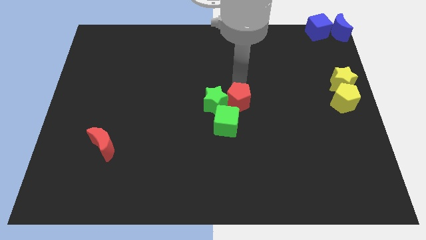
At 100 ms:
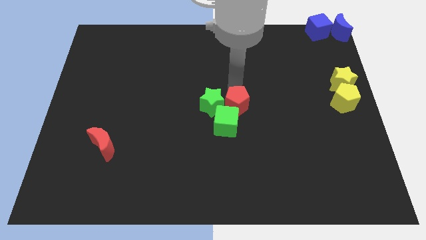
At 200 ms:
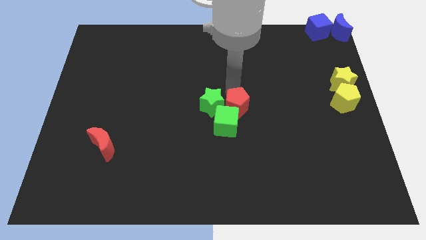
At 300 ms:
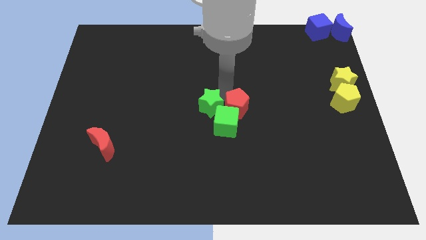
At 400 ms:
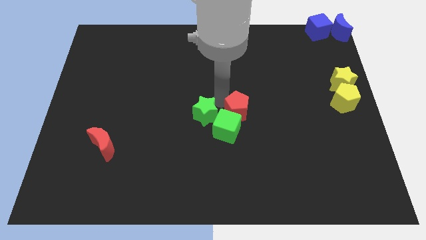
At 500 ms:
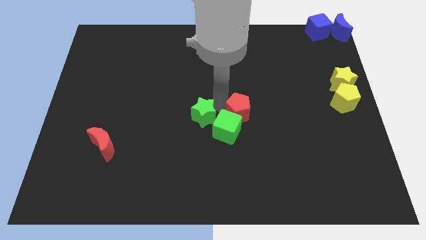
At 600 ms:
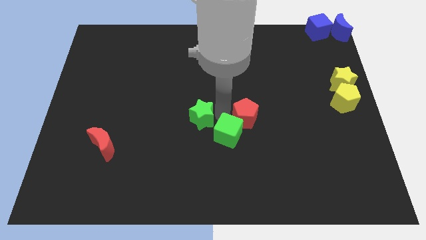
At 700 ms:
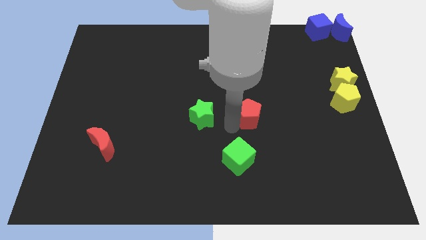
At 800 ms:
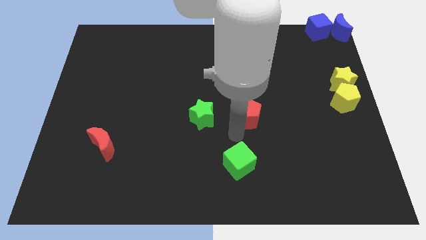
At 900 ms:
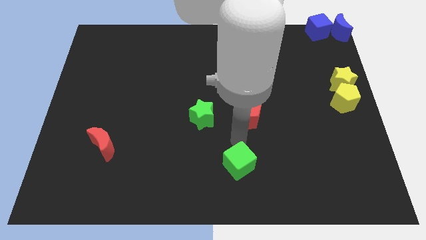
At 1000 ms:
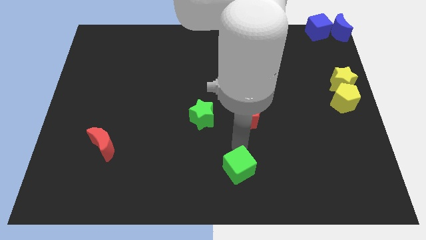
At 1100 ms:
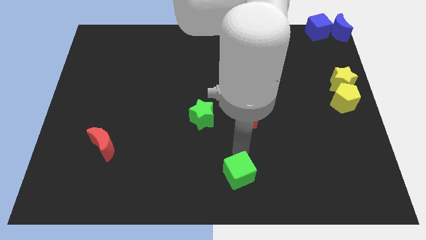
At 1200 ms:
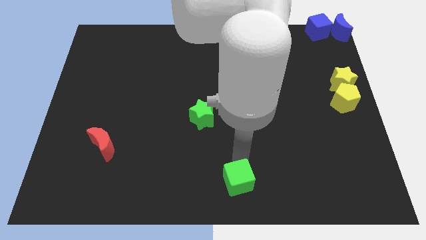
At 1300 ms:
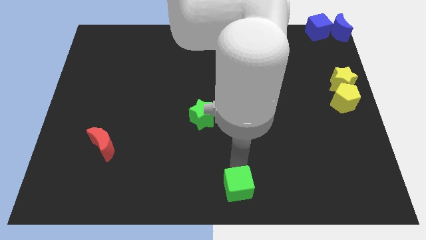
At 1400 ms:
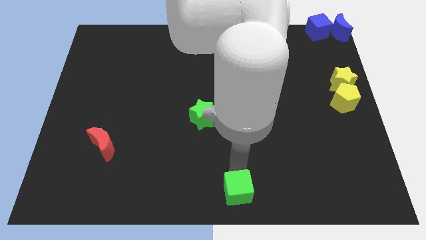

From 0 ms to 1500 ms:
push green cube towards bottom

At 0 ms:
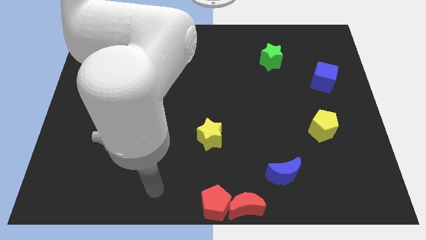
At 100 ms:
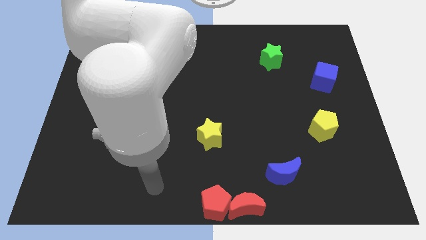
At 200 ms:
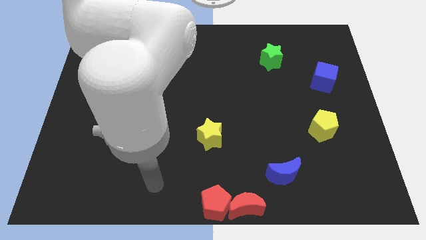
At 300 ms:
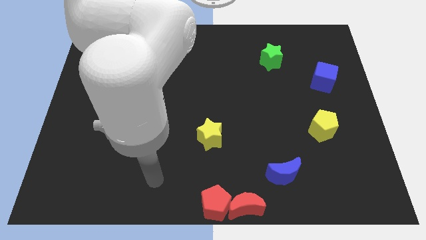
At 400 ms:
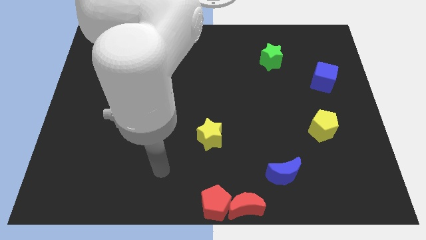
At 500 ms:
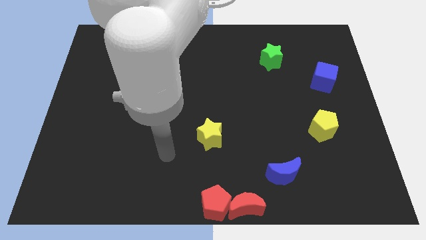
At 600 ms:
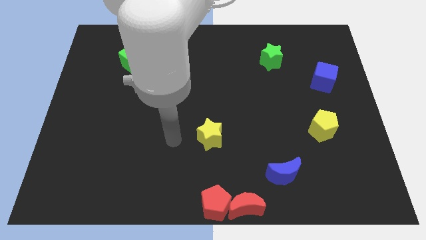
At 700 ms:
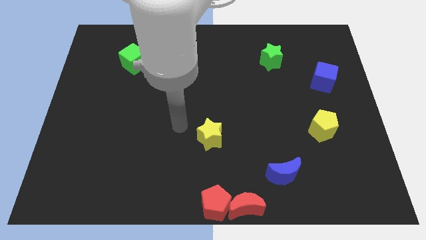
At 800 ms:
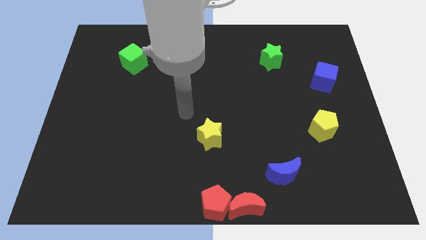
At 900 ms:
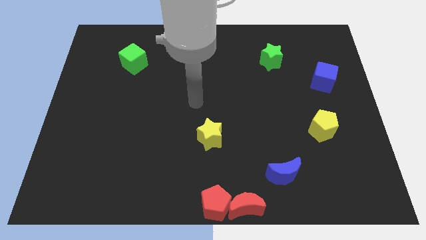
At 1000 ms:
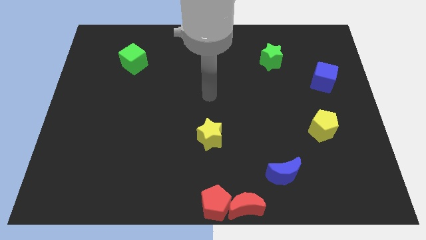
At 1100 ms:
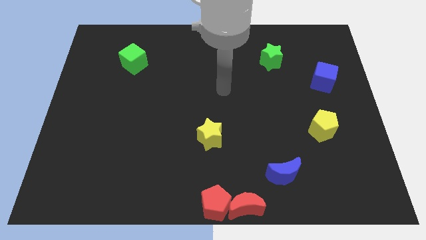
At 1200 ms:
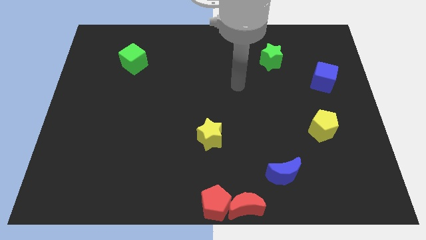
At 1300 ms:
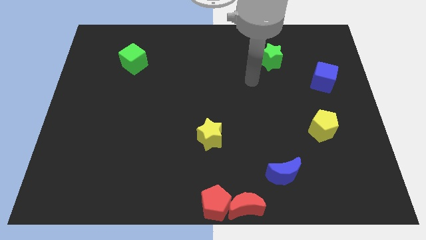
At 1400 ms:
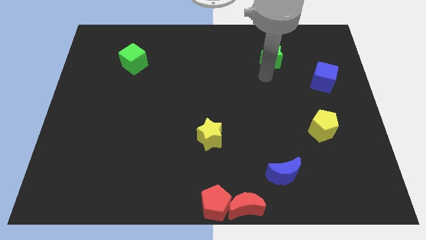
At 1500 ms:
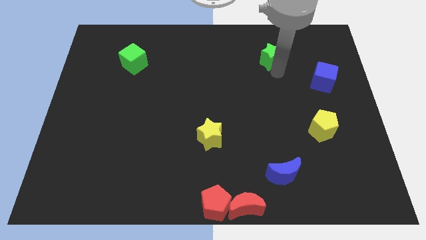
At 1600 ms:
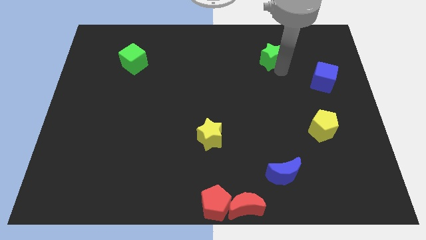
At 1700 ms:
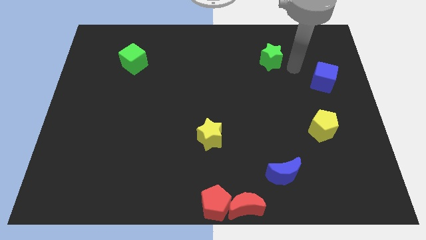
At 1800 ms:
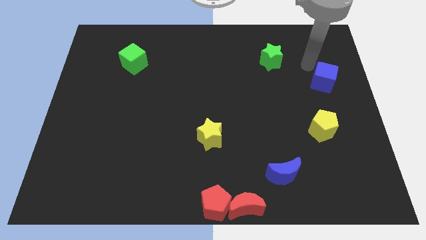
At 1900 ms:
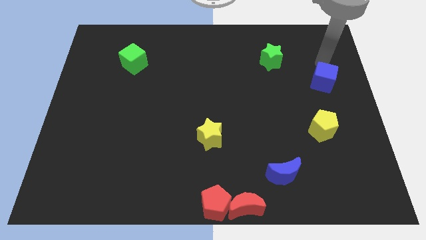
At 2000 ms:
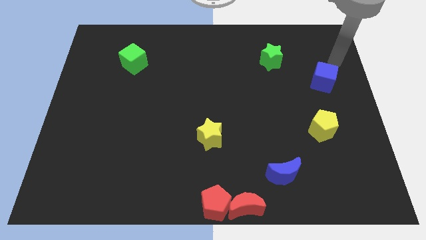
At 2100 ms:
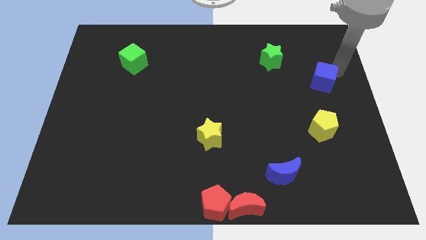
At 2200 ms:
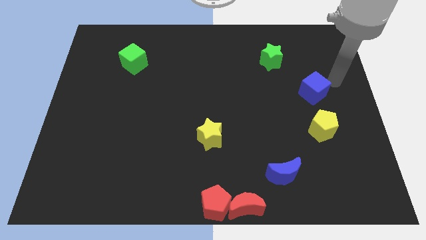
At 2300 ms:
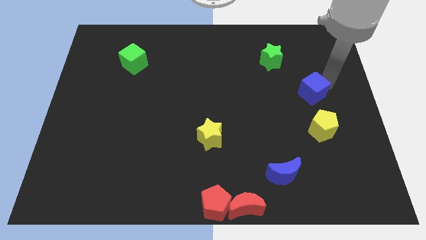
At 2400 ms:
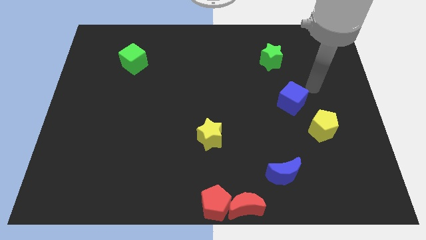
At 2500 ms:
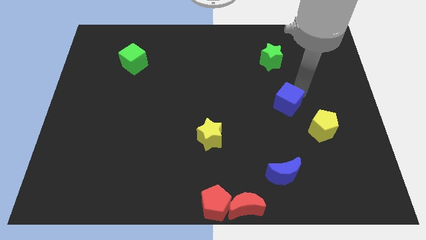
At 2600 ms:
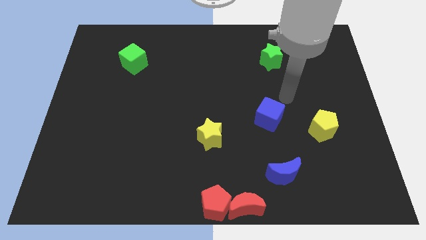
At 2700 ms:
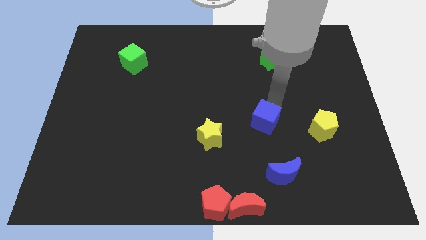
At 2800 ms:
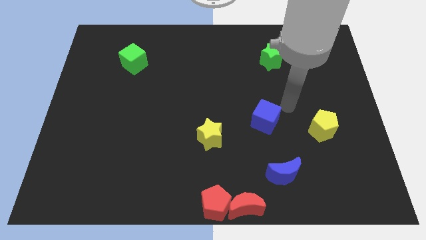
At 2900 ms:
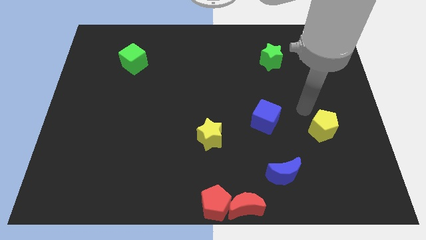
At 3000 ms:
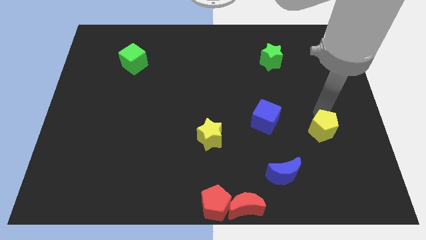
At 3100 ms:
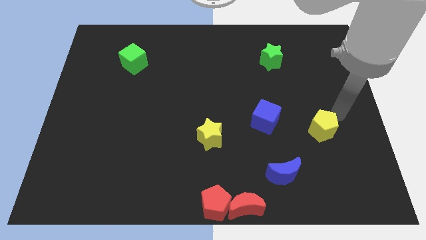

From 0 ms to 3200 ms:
place the blue cube at the top of the blue moon

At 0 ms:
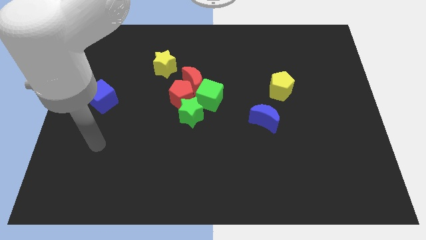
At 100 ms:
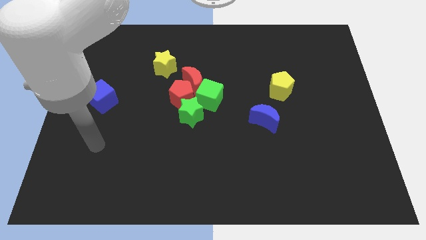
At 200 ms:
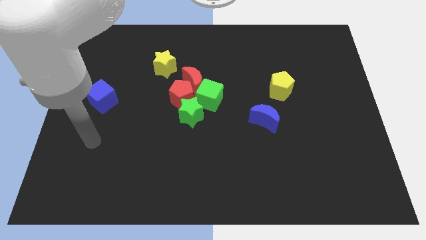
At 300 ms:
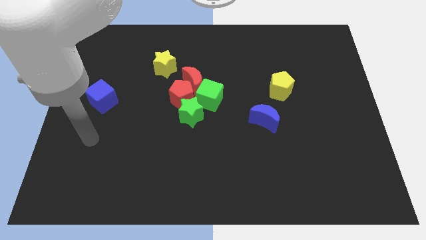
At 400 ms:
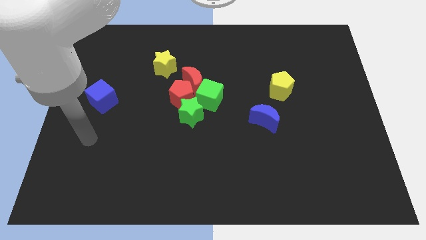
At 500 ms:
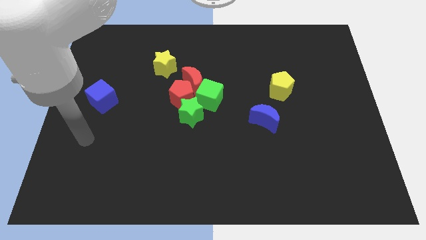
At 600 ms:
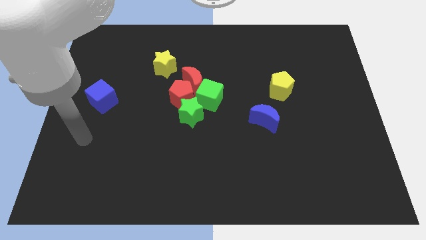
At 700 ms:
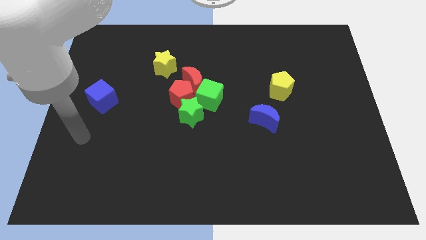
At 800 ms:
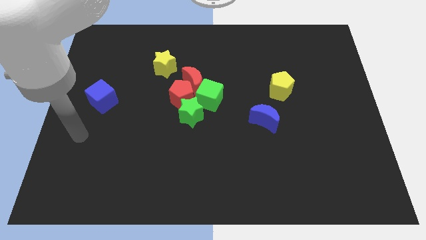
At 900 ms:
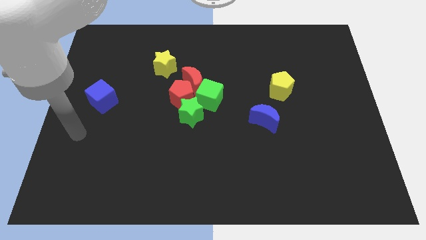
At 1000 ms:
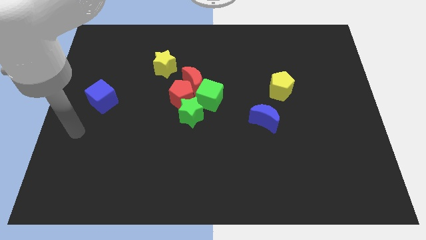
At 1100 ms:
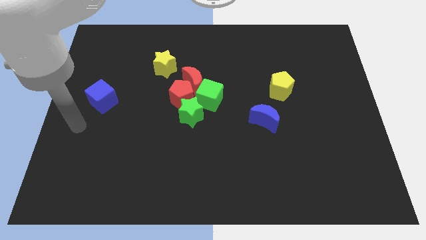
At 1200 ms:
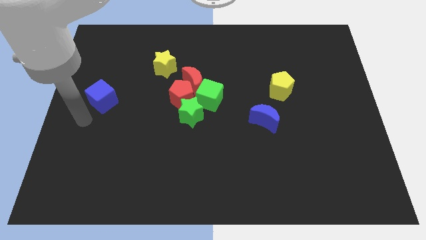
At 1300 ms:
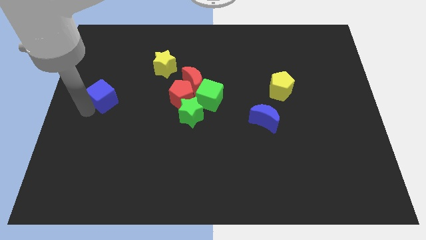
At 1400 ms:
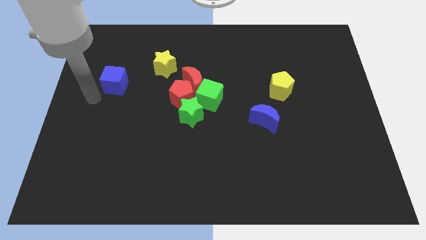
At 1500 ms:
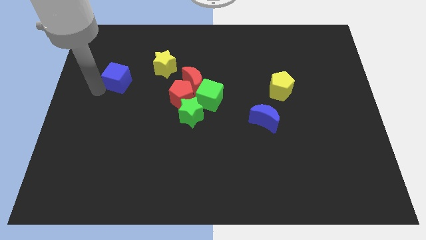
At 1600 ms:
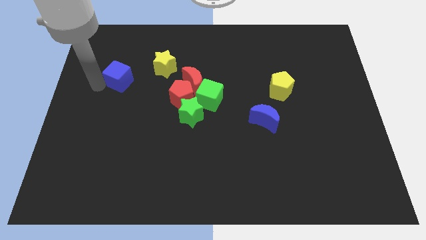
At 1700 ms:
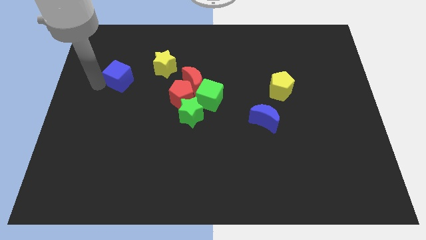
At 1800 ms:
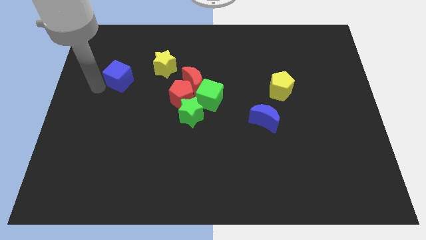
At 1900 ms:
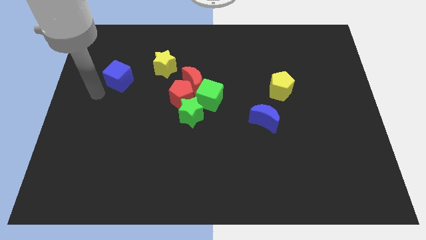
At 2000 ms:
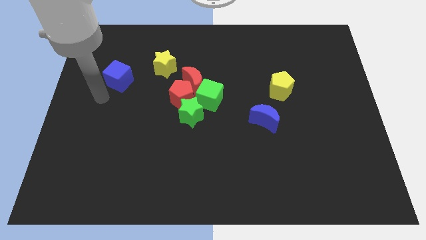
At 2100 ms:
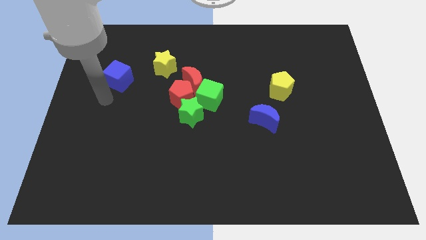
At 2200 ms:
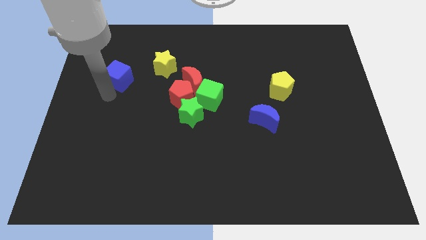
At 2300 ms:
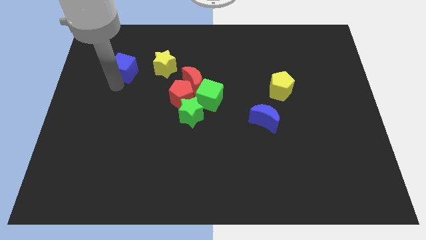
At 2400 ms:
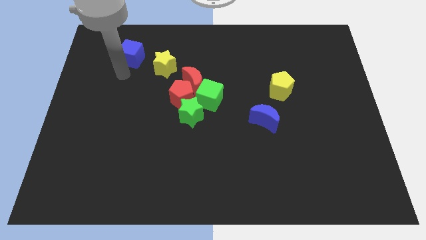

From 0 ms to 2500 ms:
push the blue cube to the left side of the yellow star

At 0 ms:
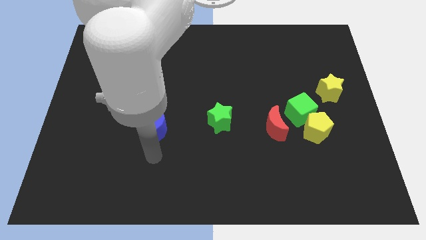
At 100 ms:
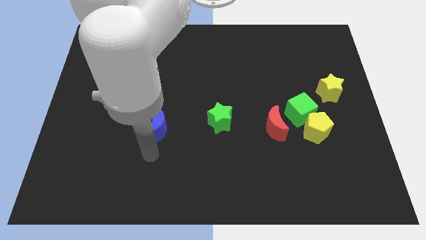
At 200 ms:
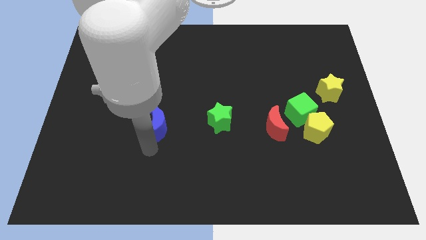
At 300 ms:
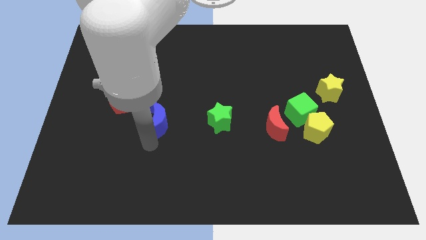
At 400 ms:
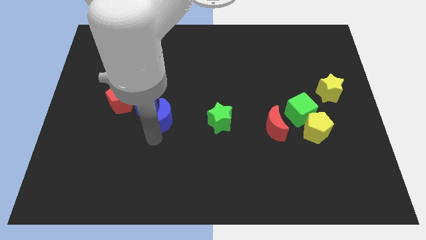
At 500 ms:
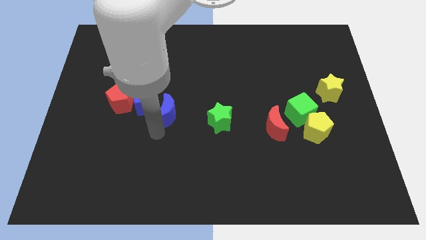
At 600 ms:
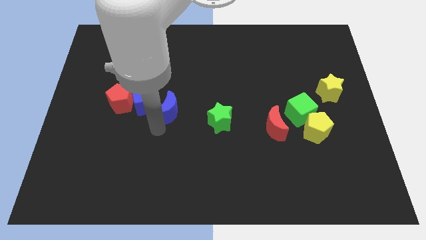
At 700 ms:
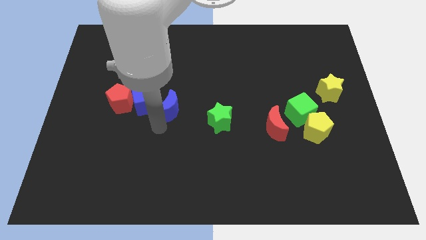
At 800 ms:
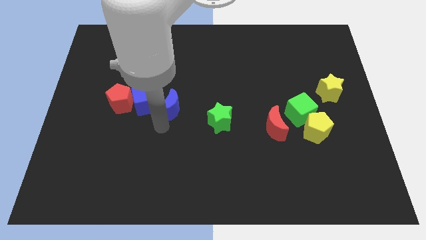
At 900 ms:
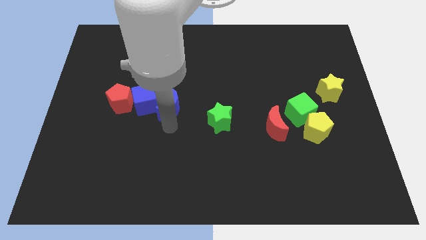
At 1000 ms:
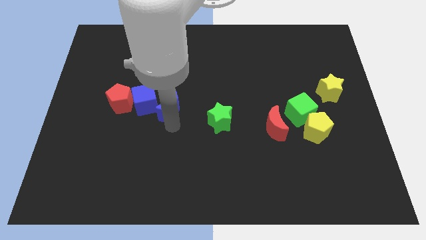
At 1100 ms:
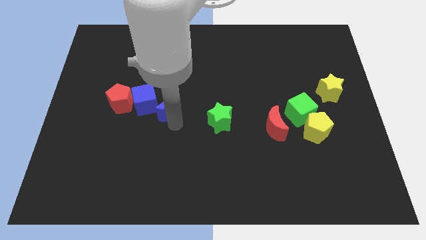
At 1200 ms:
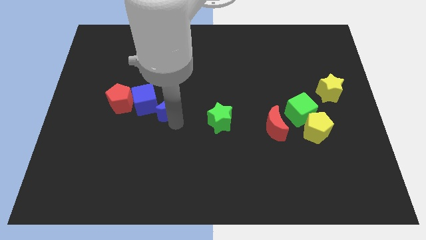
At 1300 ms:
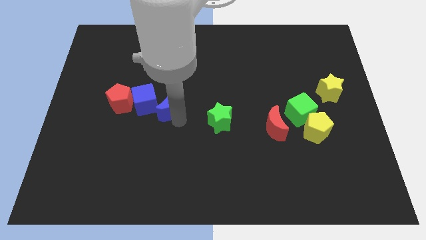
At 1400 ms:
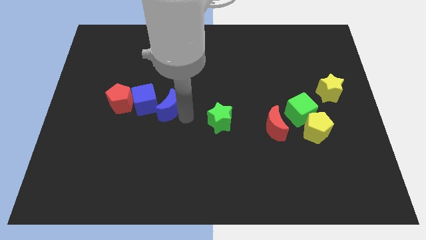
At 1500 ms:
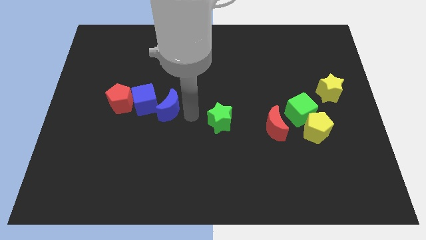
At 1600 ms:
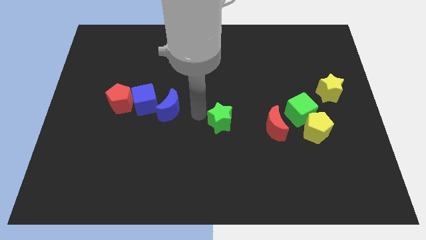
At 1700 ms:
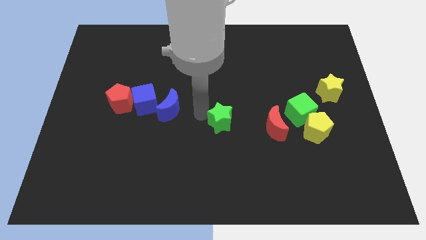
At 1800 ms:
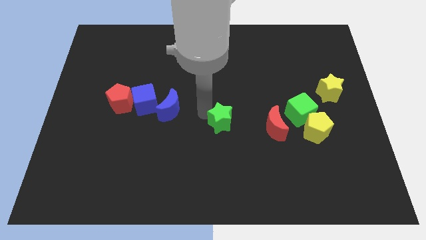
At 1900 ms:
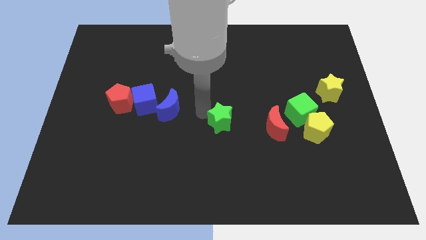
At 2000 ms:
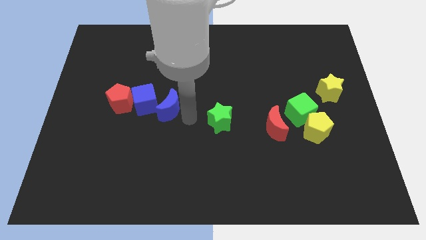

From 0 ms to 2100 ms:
slide blue moon to right of blue cube
